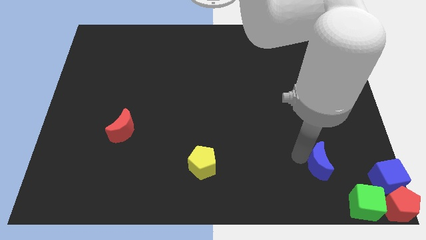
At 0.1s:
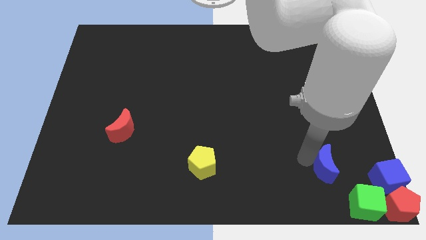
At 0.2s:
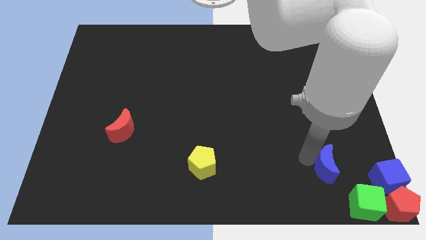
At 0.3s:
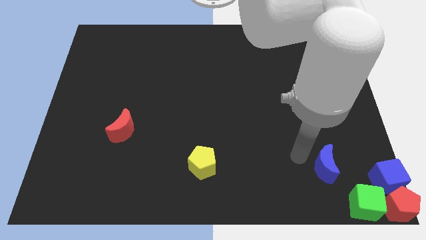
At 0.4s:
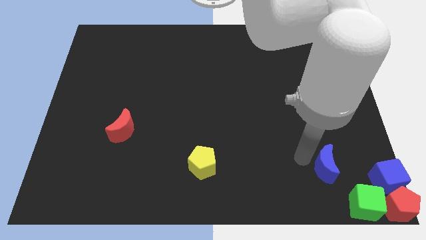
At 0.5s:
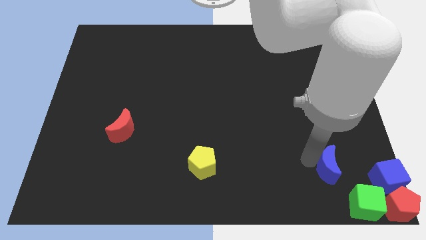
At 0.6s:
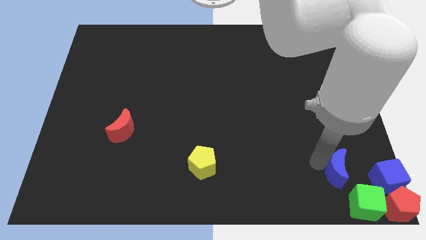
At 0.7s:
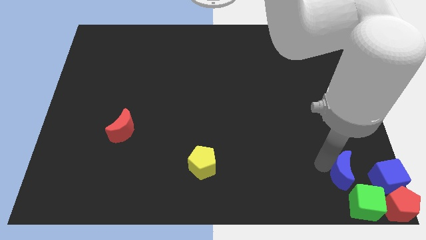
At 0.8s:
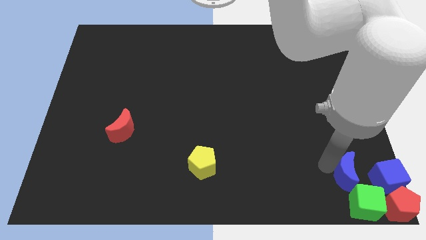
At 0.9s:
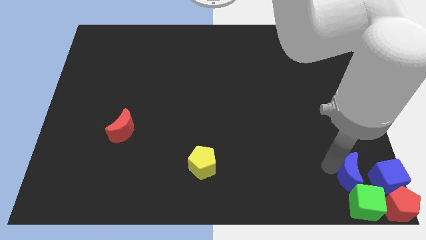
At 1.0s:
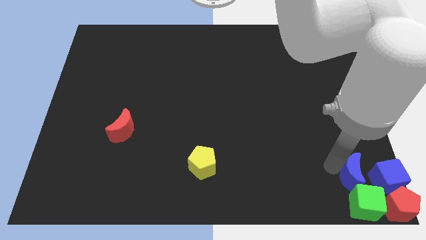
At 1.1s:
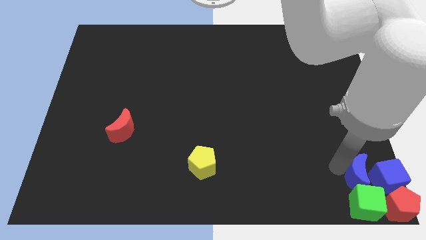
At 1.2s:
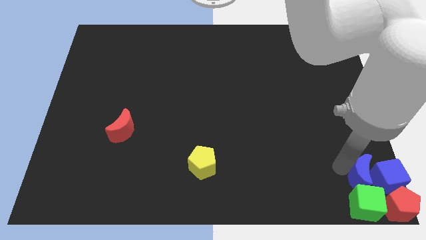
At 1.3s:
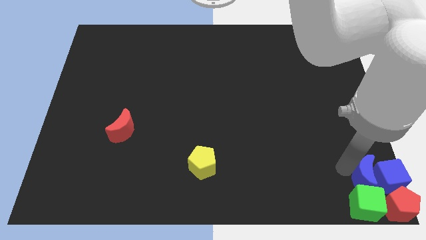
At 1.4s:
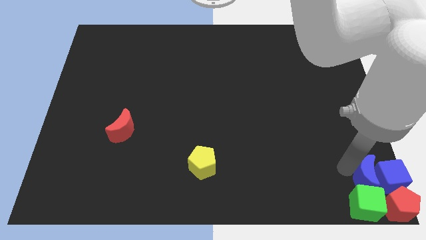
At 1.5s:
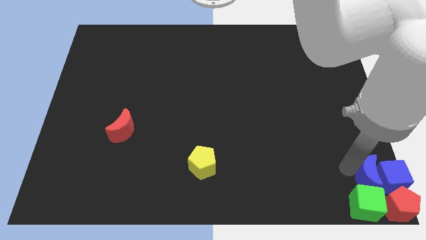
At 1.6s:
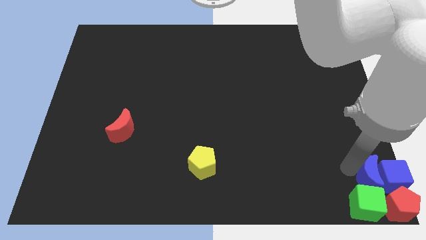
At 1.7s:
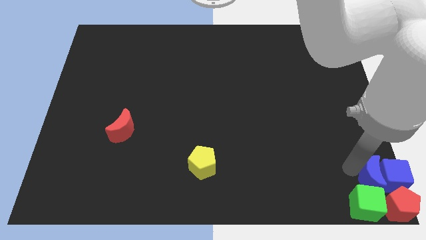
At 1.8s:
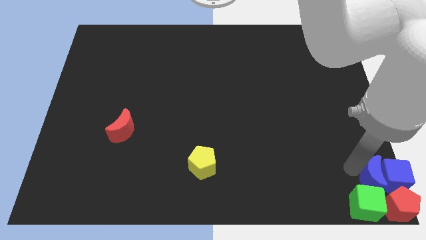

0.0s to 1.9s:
push the blue crescent into the blue square

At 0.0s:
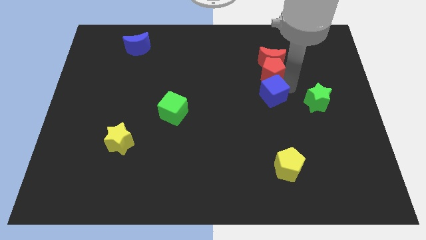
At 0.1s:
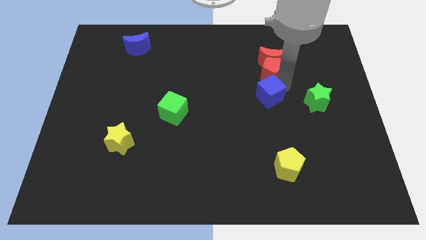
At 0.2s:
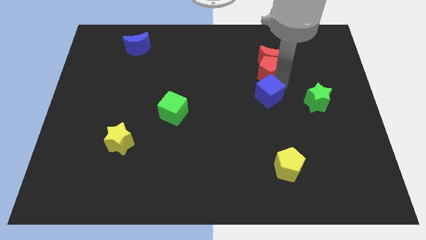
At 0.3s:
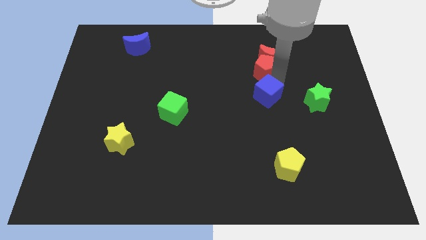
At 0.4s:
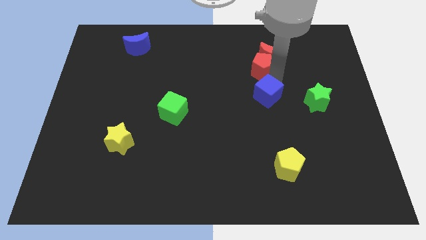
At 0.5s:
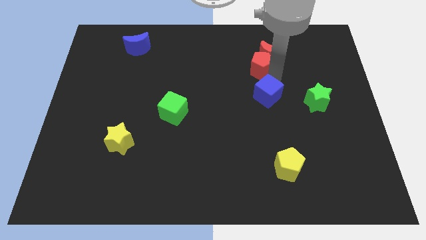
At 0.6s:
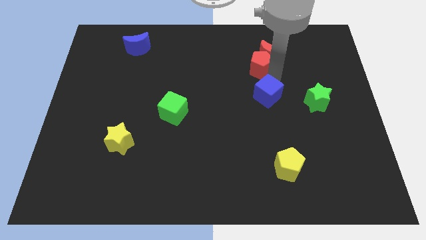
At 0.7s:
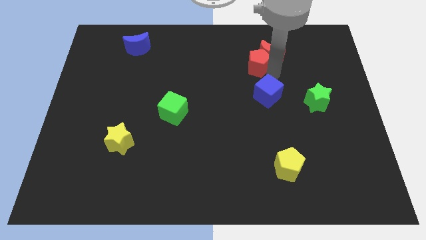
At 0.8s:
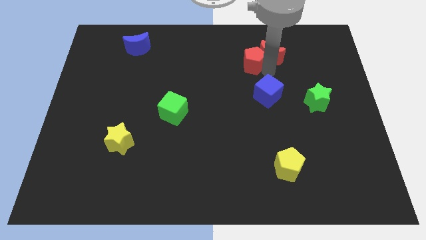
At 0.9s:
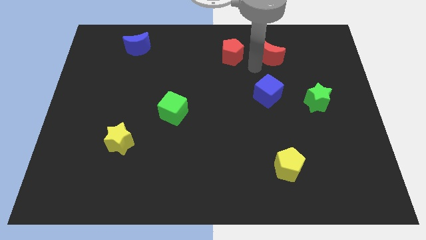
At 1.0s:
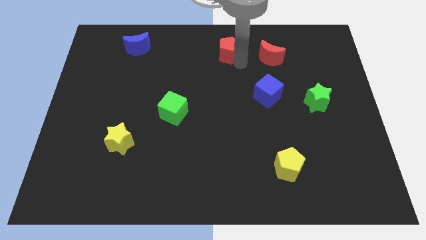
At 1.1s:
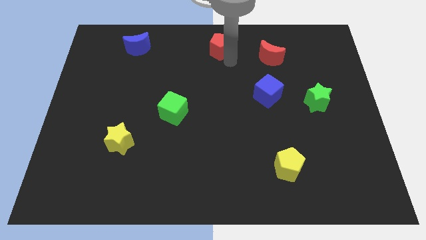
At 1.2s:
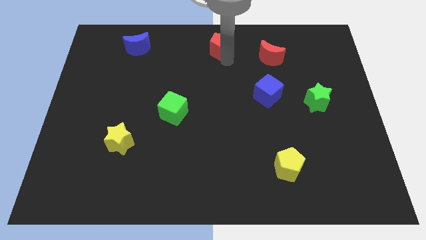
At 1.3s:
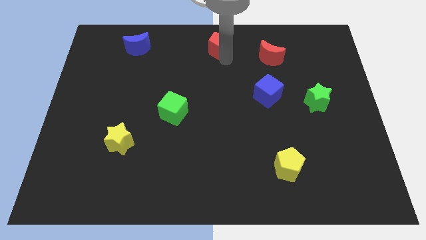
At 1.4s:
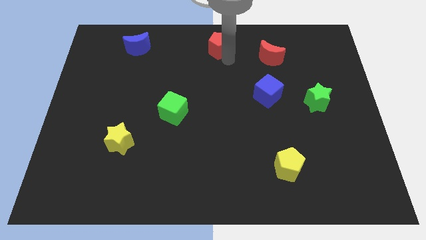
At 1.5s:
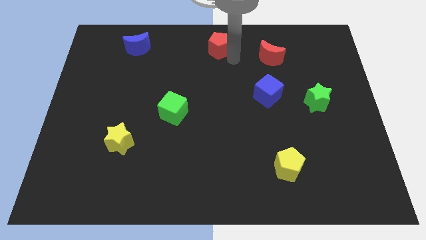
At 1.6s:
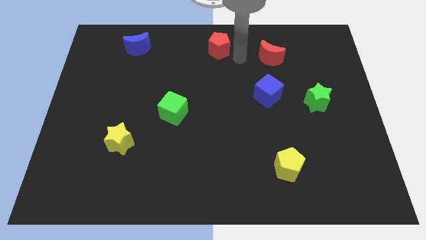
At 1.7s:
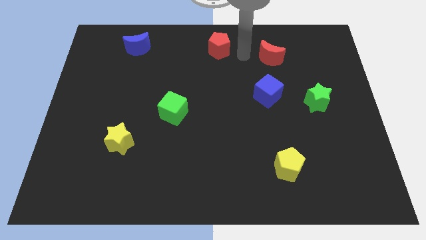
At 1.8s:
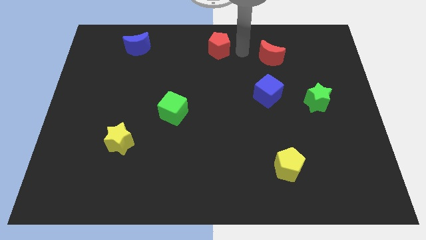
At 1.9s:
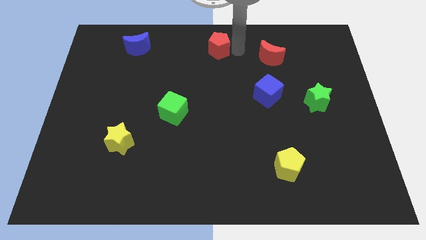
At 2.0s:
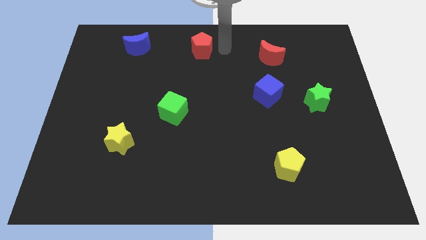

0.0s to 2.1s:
place the red pentagon to the top center of the board

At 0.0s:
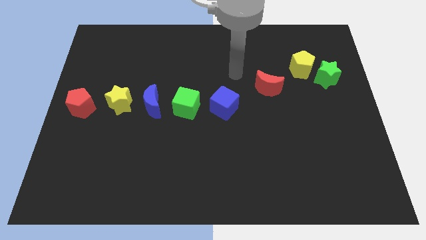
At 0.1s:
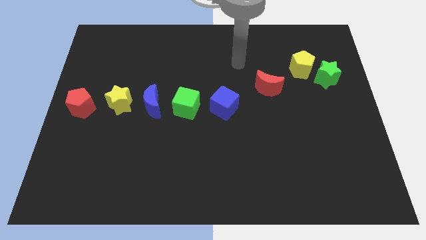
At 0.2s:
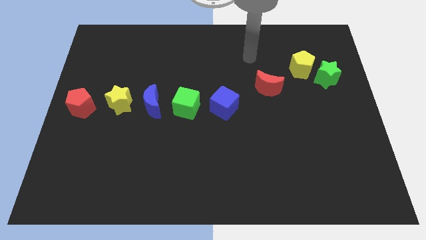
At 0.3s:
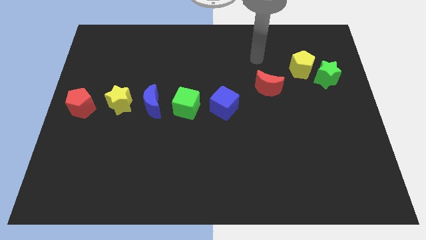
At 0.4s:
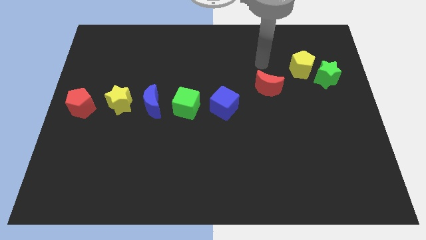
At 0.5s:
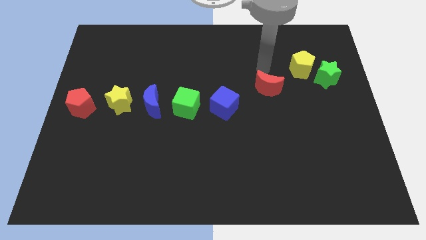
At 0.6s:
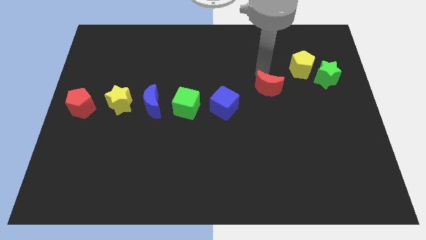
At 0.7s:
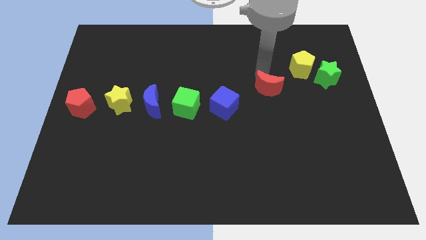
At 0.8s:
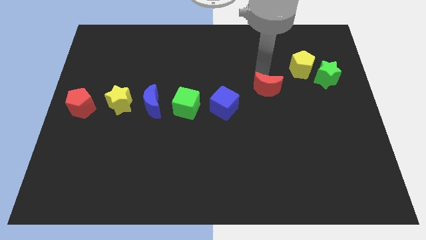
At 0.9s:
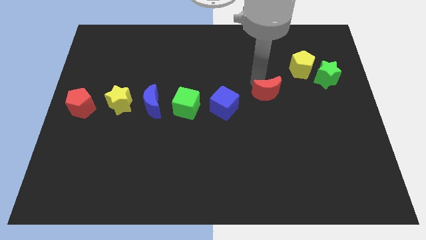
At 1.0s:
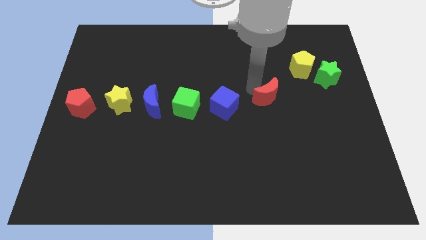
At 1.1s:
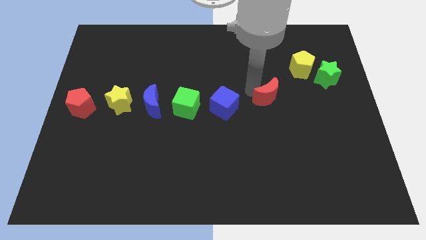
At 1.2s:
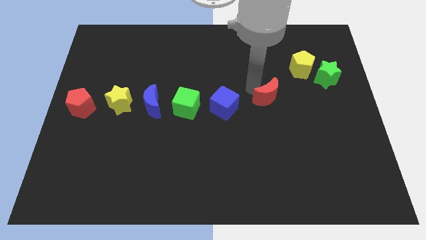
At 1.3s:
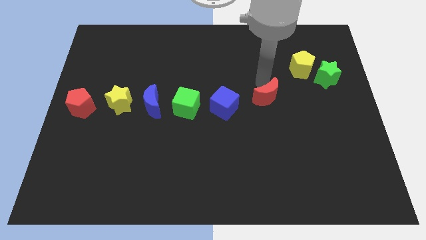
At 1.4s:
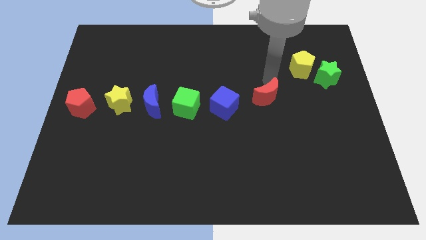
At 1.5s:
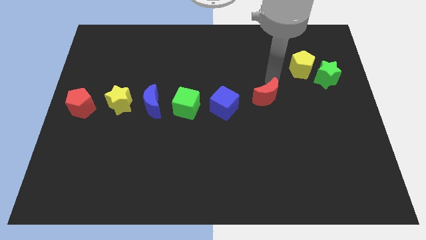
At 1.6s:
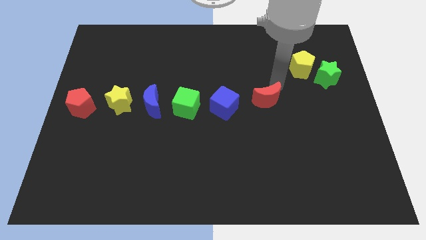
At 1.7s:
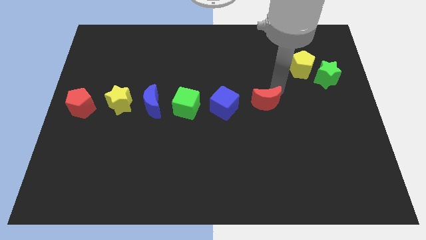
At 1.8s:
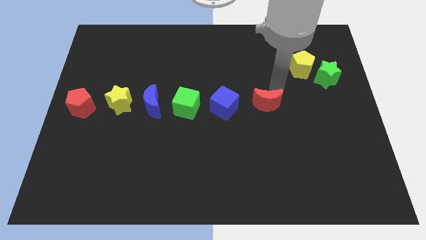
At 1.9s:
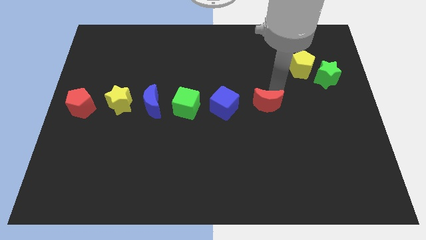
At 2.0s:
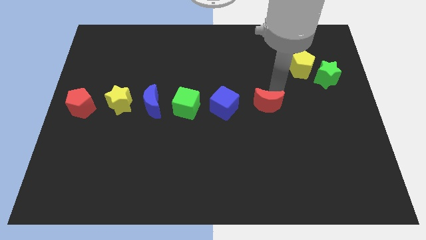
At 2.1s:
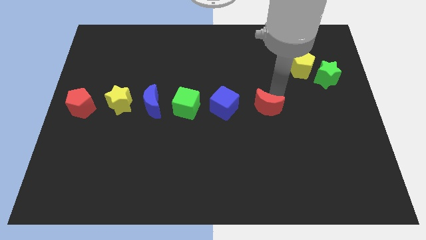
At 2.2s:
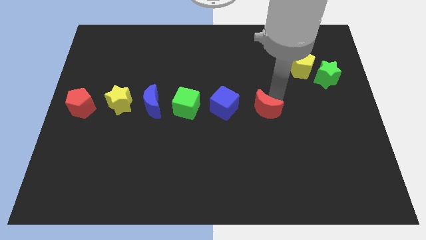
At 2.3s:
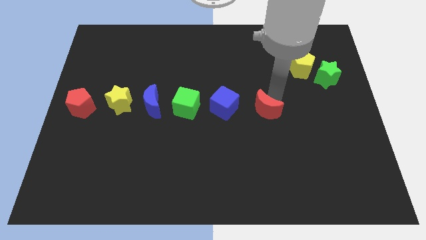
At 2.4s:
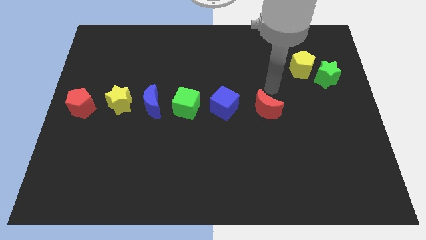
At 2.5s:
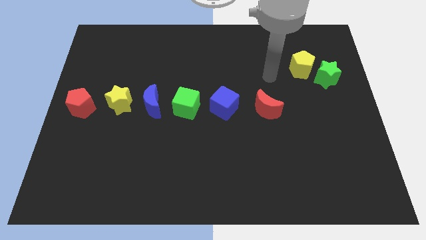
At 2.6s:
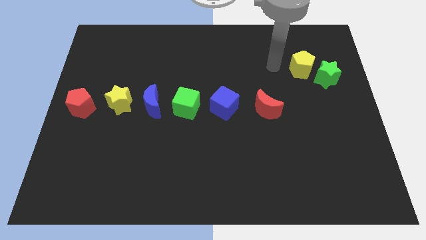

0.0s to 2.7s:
push the red moon right to the blue cube

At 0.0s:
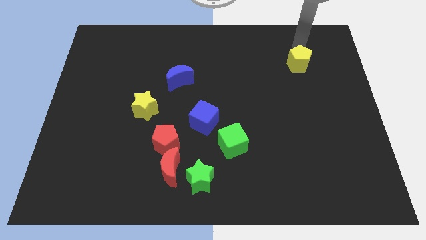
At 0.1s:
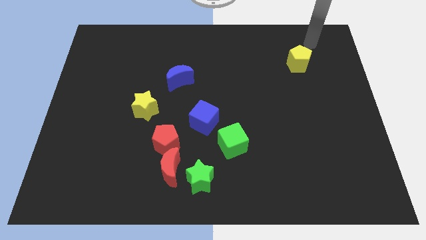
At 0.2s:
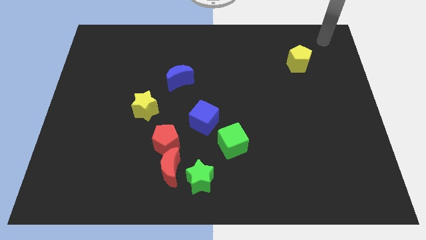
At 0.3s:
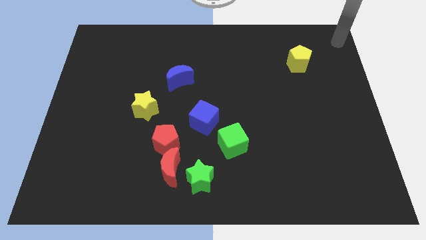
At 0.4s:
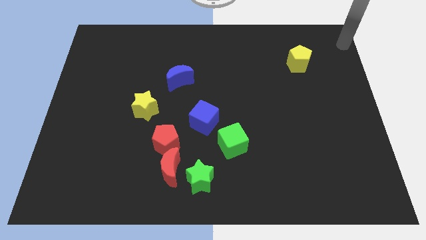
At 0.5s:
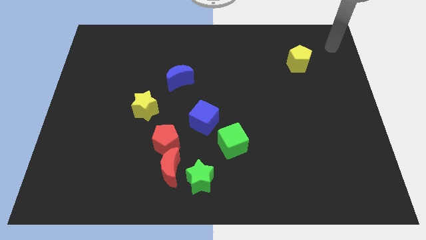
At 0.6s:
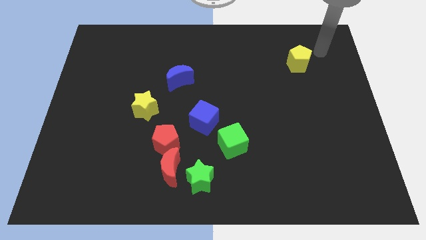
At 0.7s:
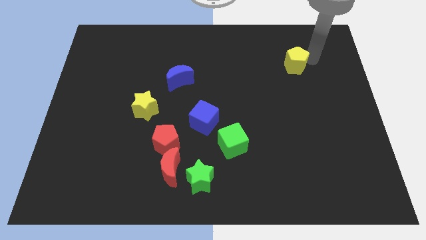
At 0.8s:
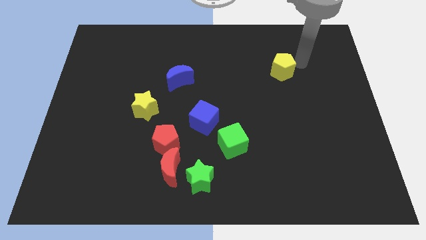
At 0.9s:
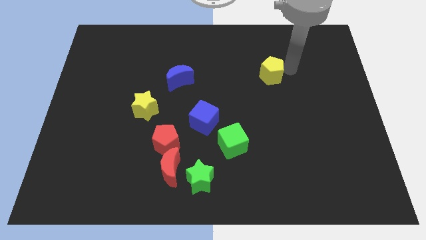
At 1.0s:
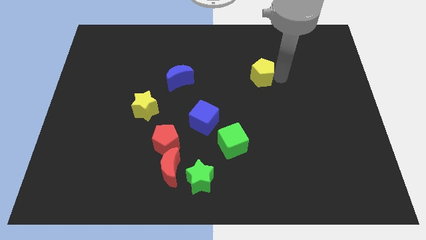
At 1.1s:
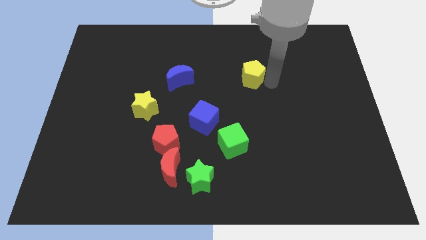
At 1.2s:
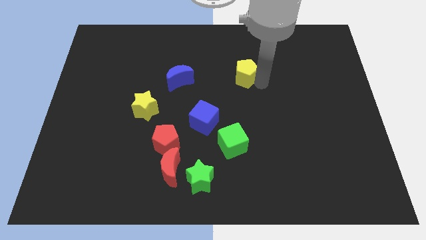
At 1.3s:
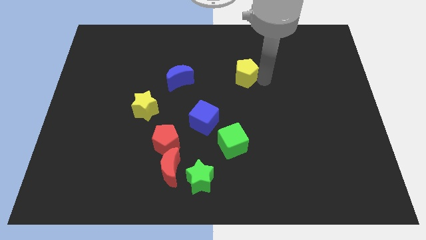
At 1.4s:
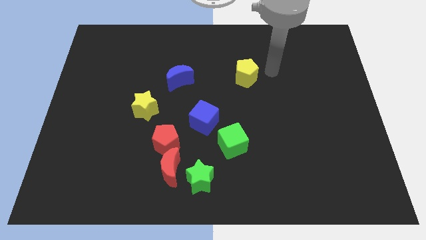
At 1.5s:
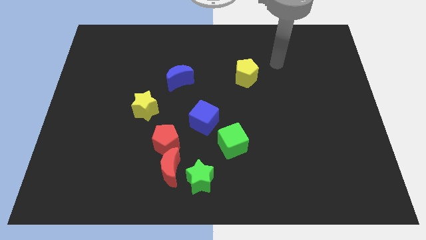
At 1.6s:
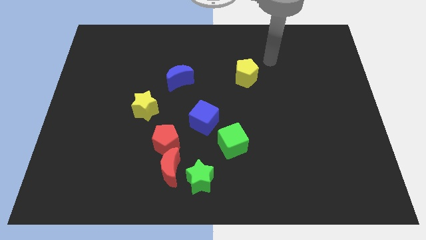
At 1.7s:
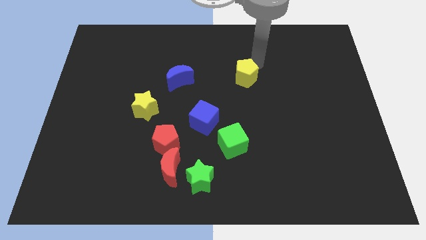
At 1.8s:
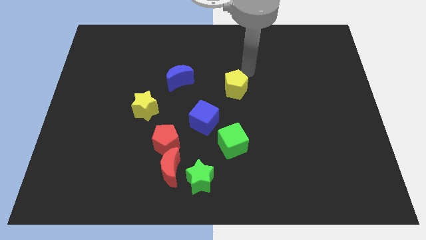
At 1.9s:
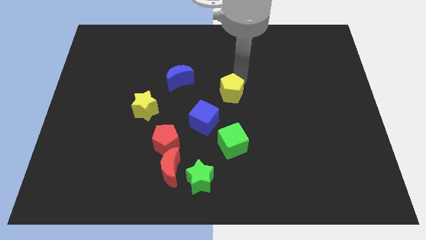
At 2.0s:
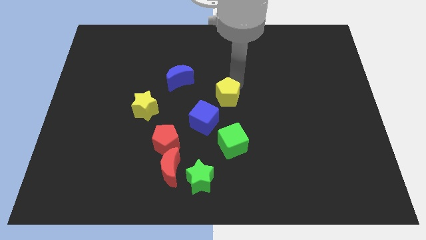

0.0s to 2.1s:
push yellow pentagon towards blue cube

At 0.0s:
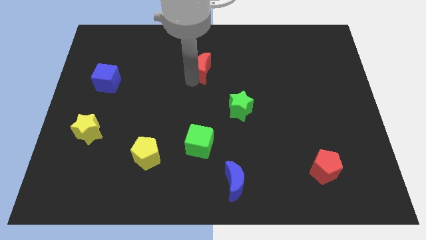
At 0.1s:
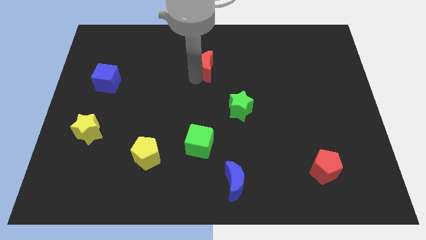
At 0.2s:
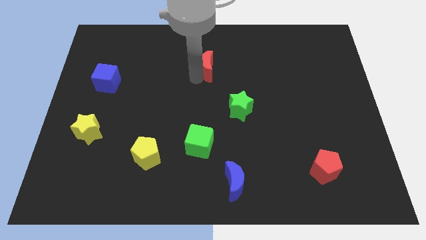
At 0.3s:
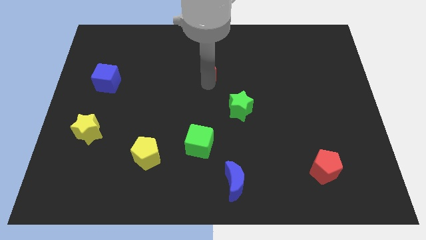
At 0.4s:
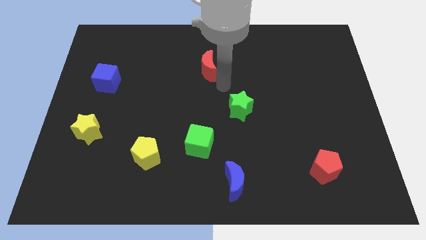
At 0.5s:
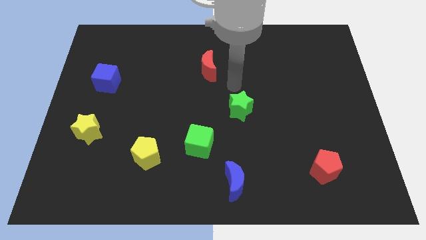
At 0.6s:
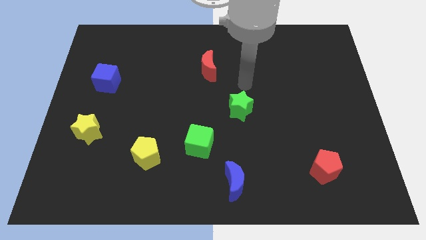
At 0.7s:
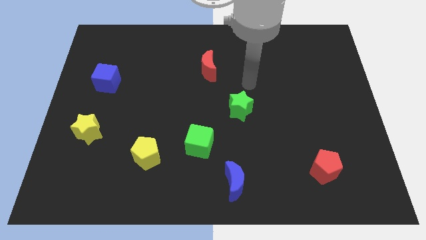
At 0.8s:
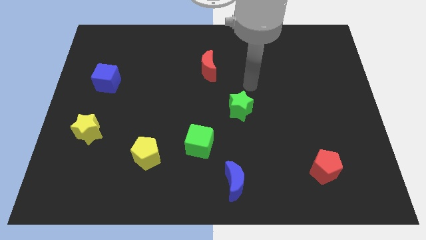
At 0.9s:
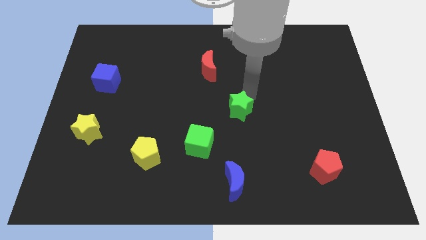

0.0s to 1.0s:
place your arm to the top of green star
